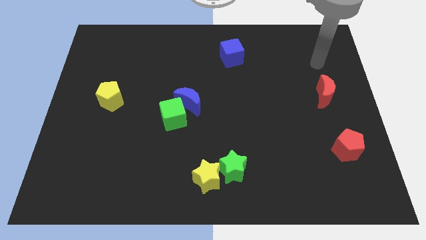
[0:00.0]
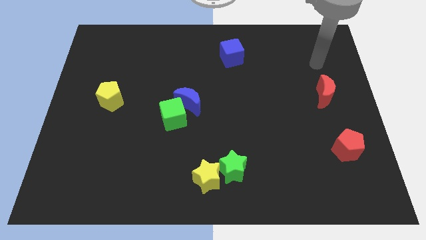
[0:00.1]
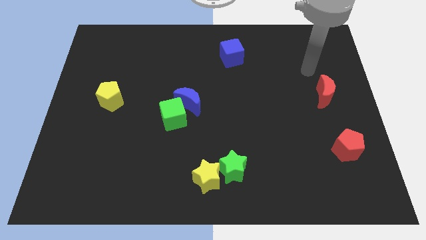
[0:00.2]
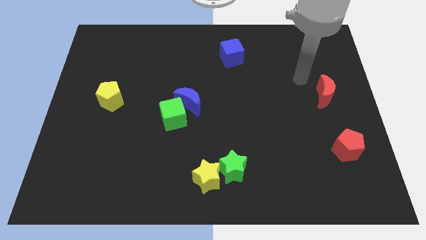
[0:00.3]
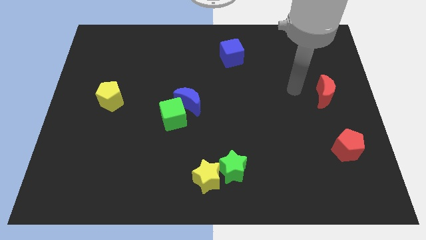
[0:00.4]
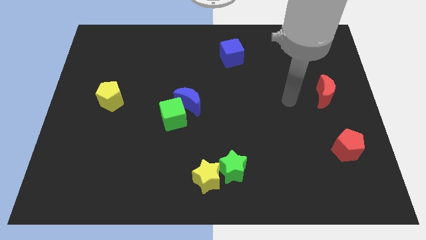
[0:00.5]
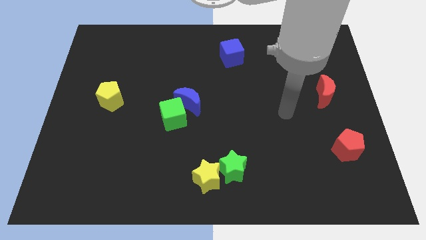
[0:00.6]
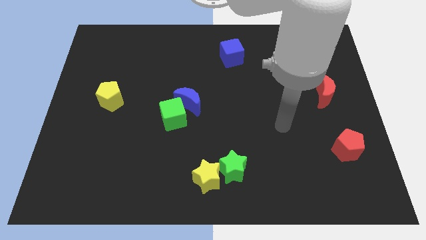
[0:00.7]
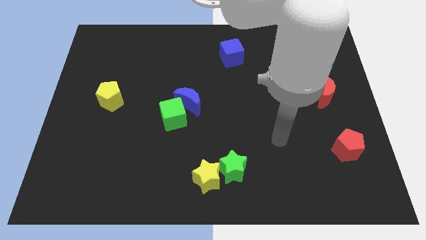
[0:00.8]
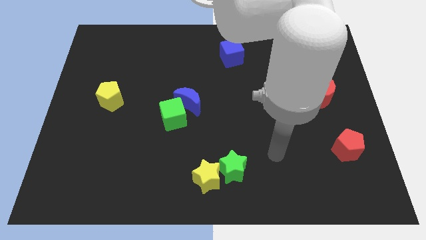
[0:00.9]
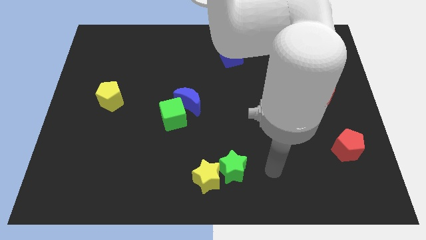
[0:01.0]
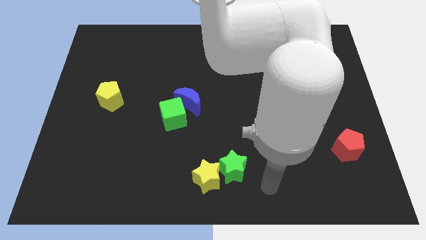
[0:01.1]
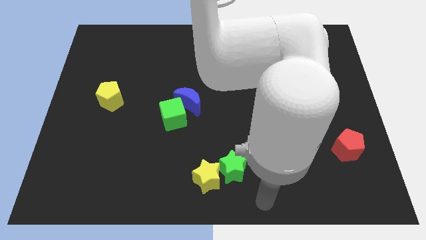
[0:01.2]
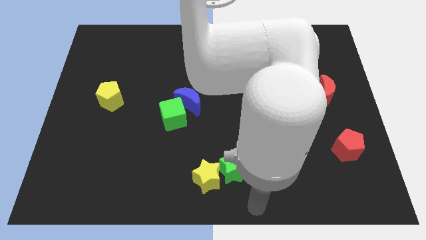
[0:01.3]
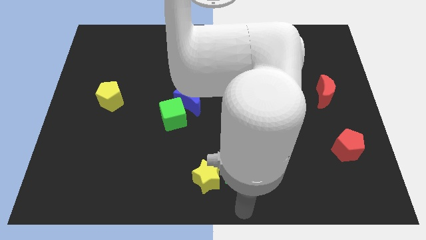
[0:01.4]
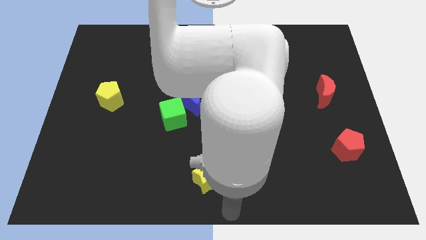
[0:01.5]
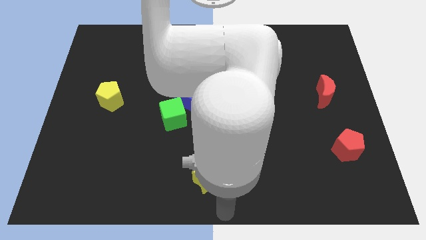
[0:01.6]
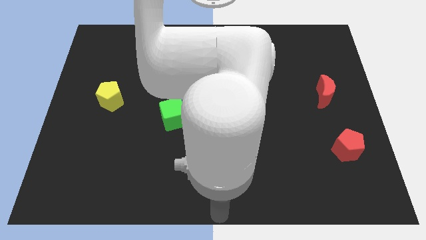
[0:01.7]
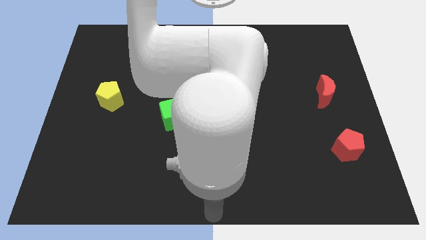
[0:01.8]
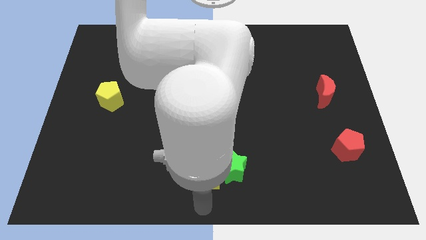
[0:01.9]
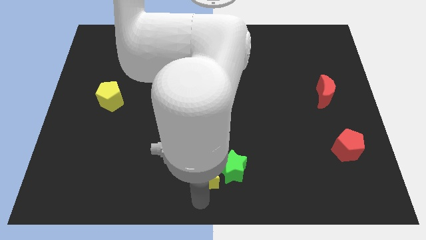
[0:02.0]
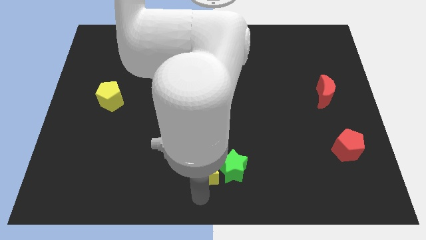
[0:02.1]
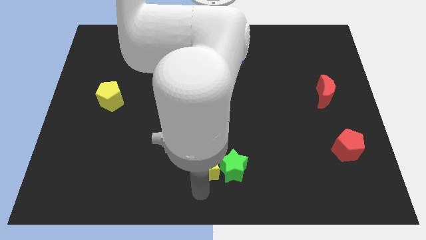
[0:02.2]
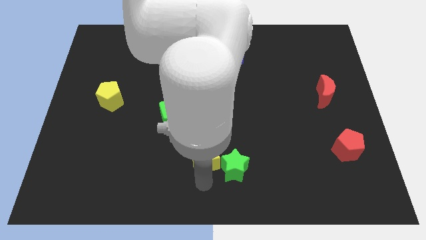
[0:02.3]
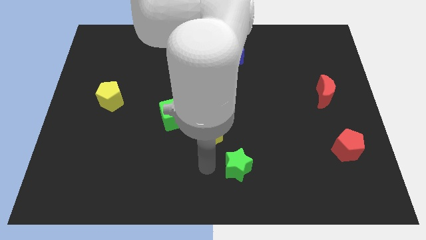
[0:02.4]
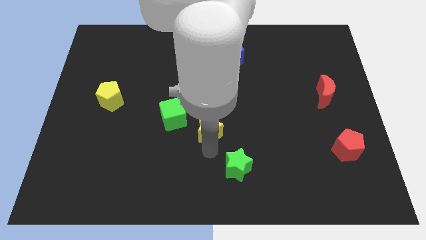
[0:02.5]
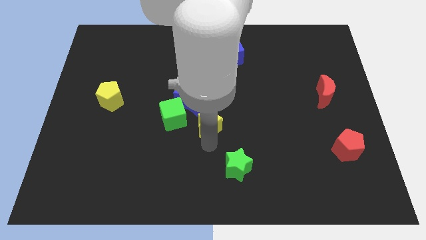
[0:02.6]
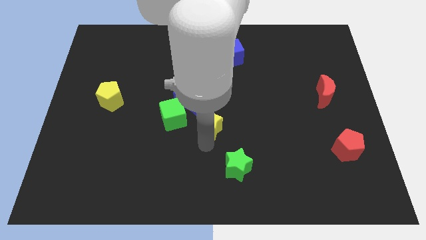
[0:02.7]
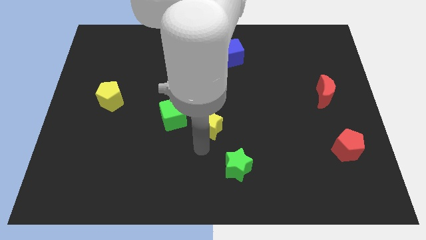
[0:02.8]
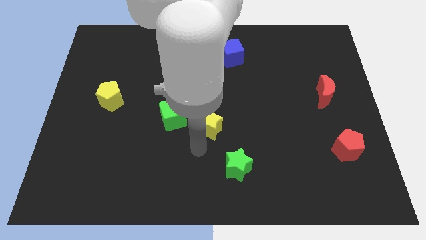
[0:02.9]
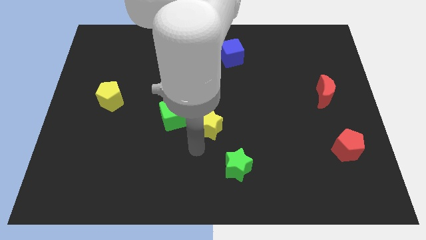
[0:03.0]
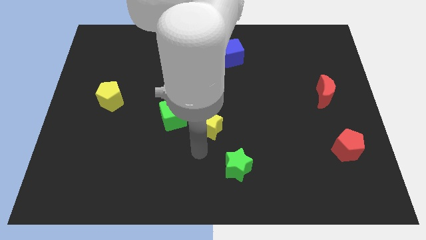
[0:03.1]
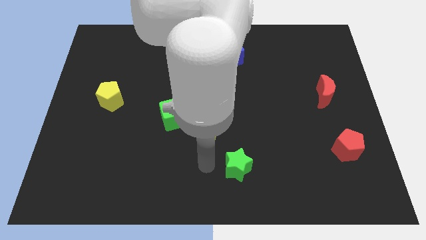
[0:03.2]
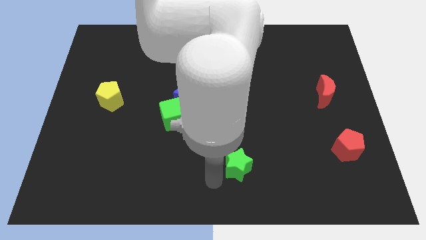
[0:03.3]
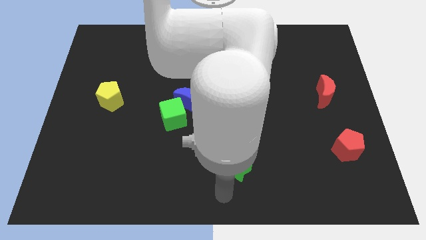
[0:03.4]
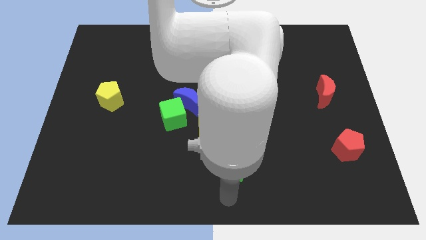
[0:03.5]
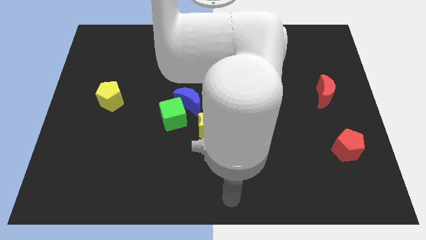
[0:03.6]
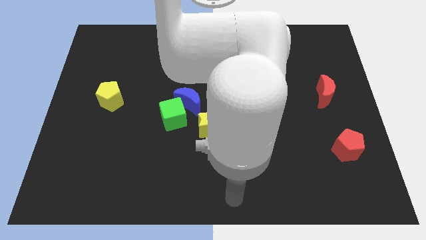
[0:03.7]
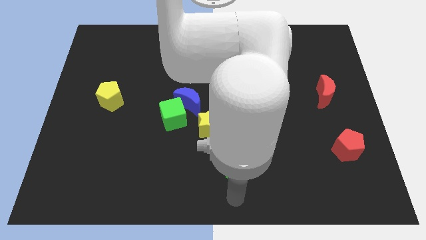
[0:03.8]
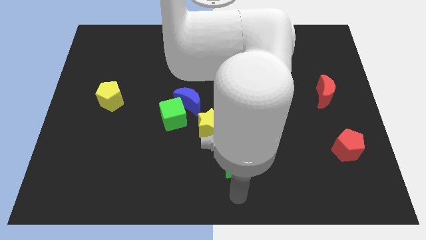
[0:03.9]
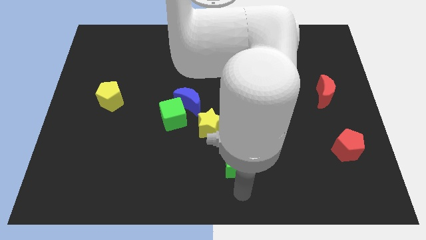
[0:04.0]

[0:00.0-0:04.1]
push the yellow star to the top of the board

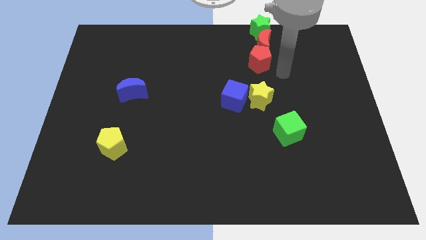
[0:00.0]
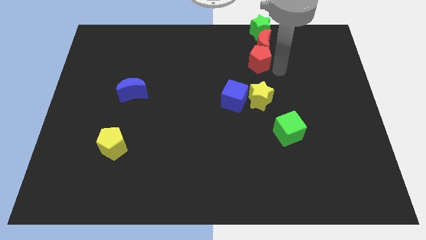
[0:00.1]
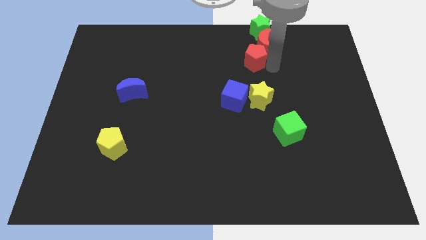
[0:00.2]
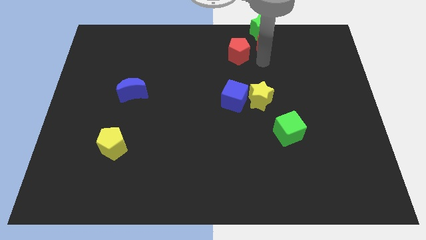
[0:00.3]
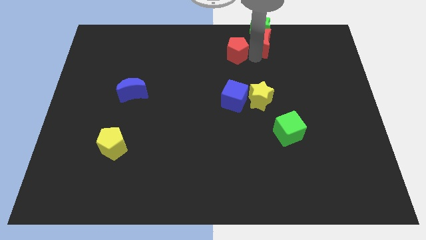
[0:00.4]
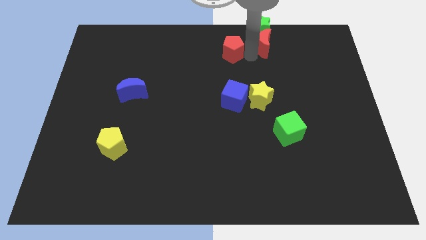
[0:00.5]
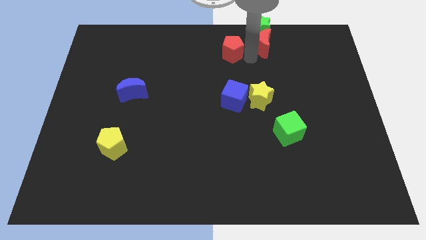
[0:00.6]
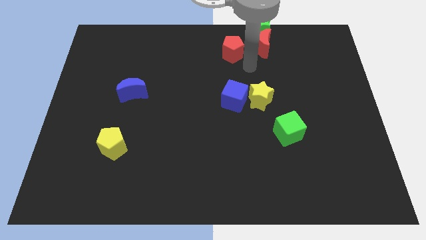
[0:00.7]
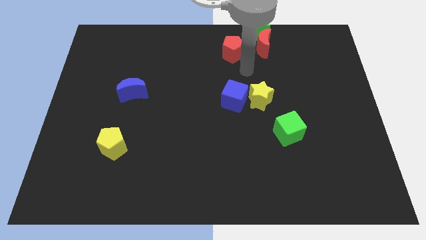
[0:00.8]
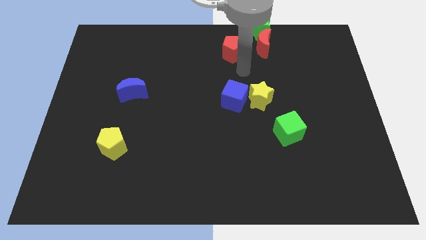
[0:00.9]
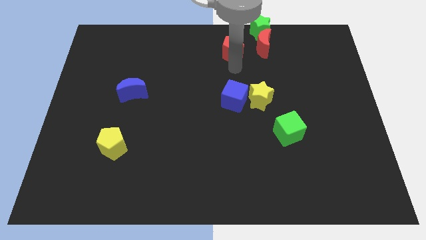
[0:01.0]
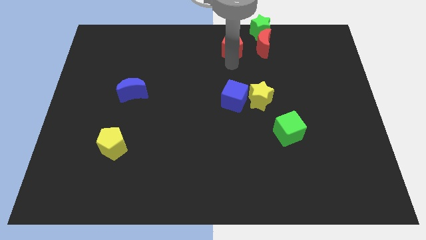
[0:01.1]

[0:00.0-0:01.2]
place the red pentagon to the left side of the red crescent

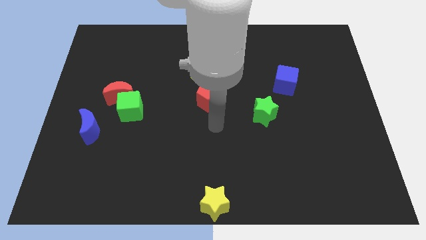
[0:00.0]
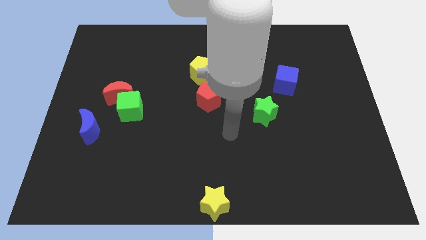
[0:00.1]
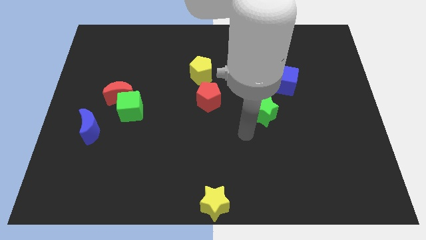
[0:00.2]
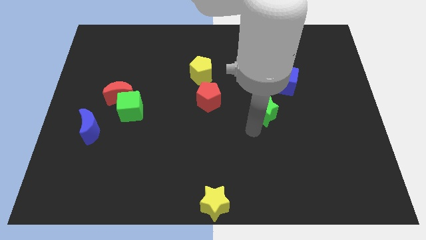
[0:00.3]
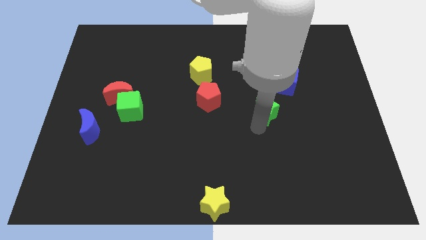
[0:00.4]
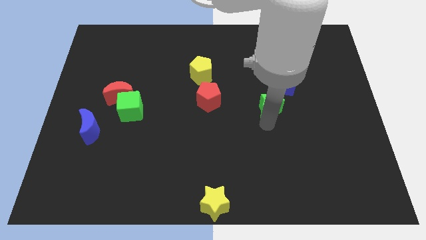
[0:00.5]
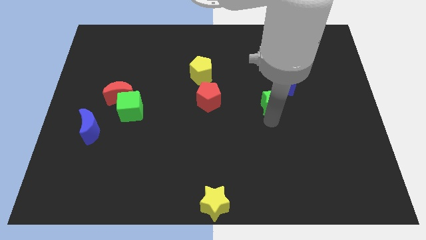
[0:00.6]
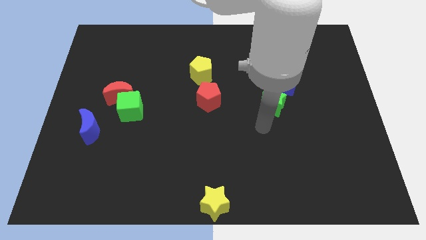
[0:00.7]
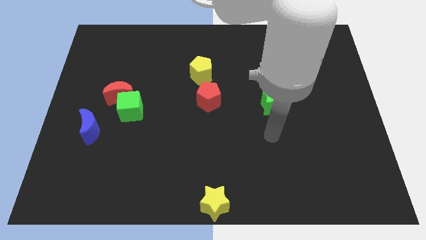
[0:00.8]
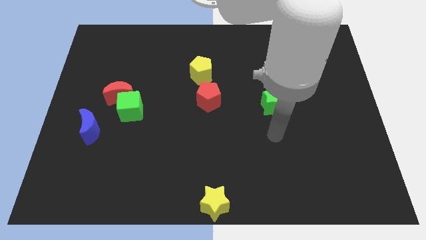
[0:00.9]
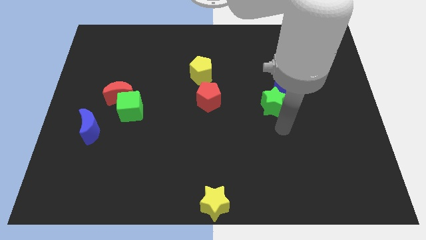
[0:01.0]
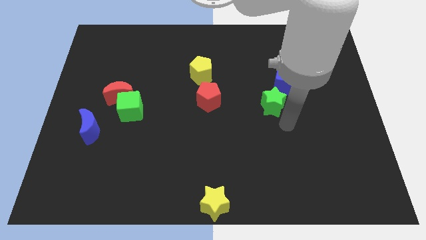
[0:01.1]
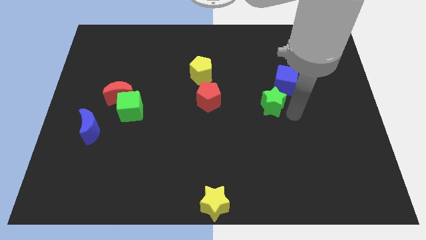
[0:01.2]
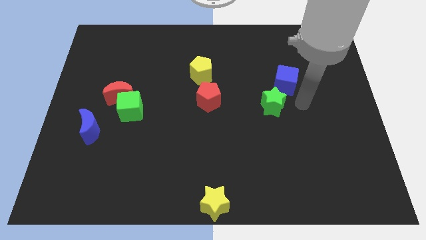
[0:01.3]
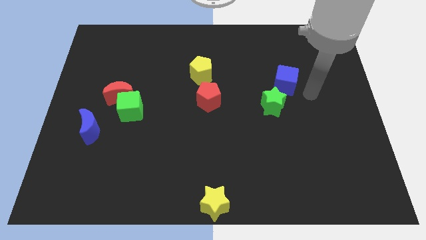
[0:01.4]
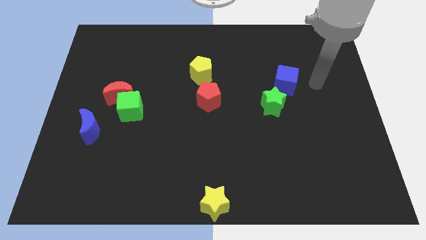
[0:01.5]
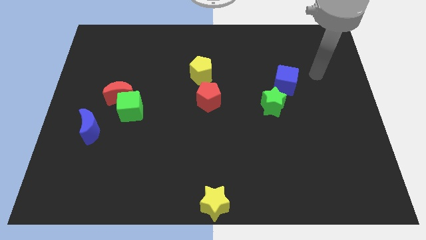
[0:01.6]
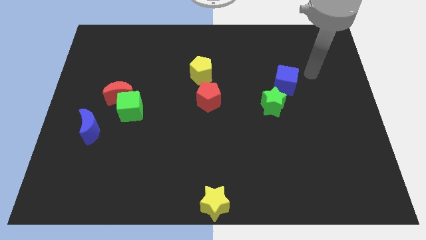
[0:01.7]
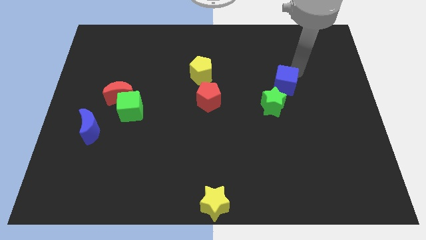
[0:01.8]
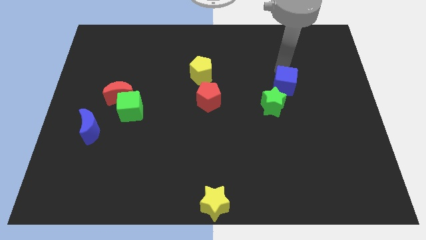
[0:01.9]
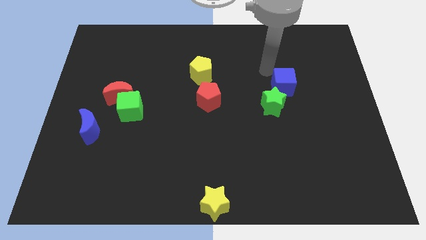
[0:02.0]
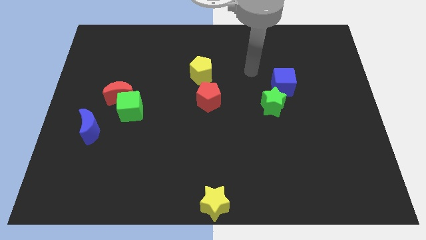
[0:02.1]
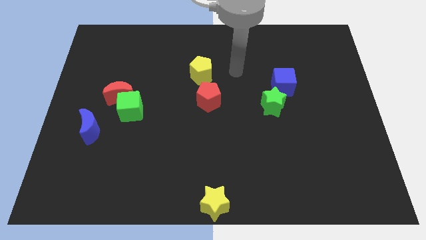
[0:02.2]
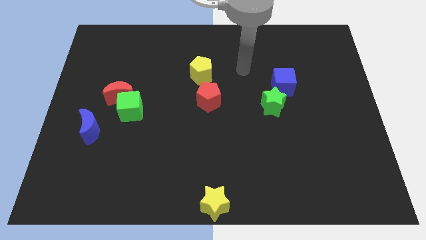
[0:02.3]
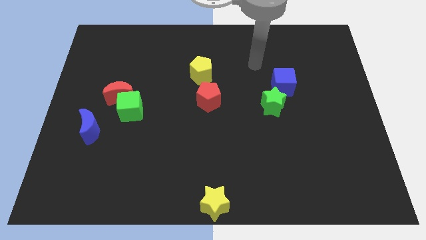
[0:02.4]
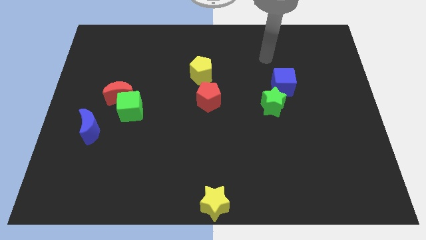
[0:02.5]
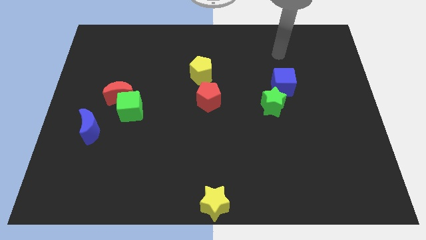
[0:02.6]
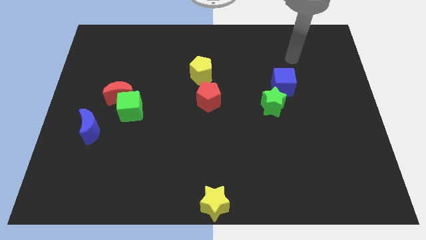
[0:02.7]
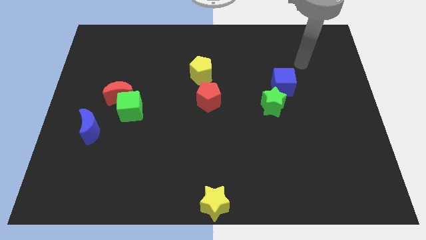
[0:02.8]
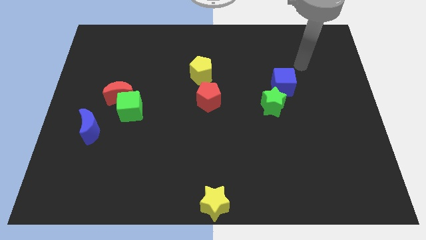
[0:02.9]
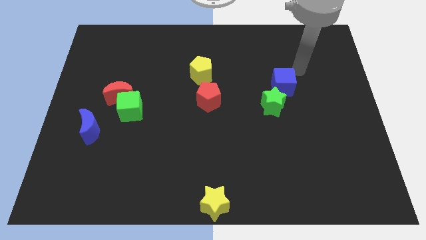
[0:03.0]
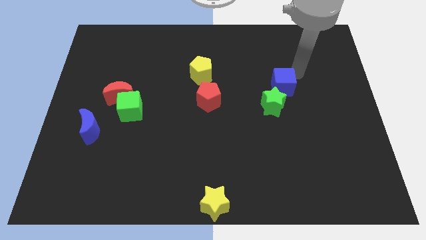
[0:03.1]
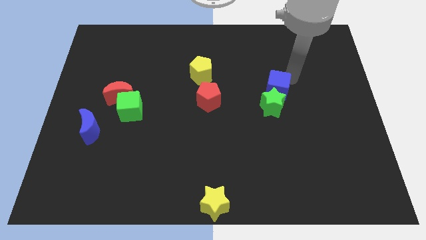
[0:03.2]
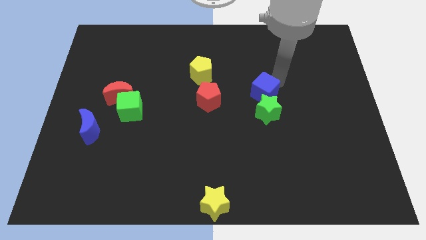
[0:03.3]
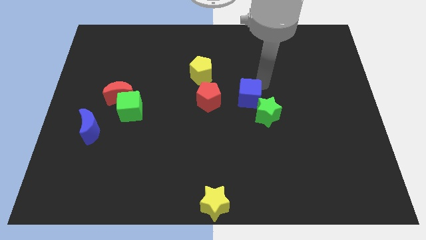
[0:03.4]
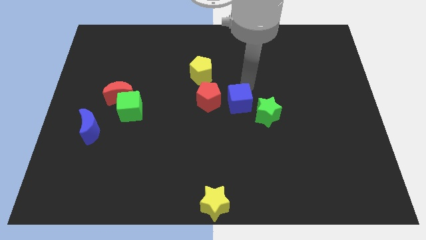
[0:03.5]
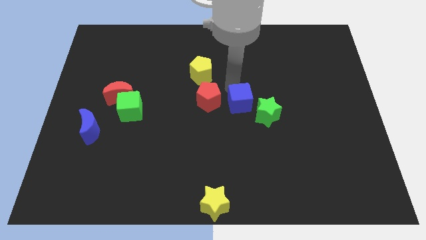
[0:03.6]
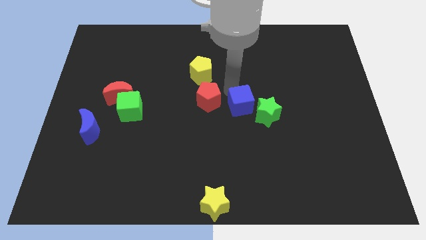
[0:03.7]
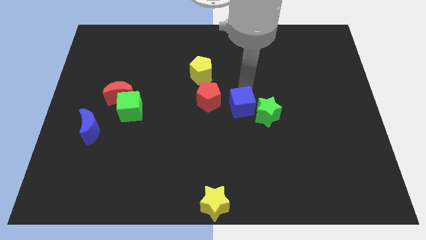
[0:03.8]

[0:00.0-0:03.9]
push the blue cube in between the red pentagon and the green star
